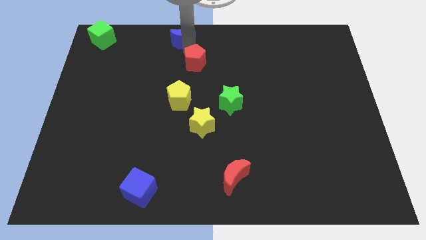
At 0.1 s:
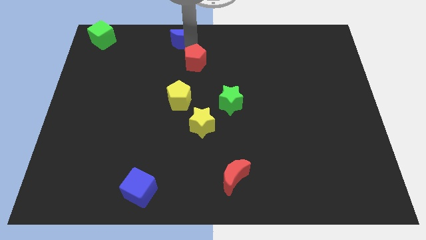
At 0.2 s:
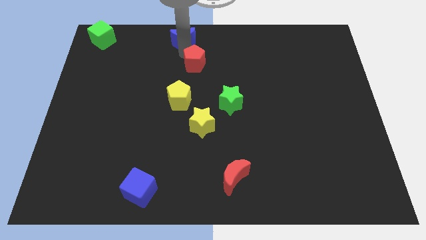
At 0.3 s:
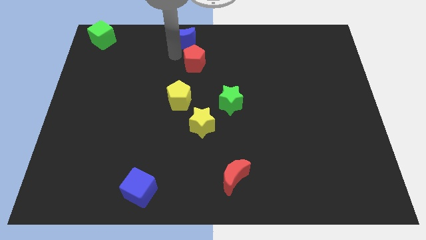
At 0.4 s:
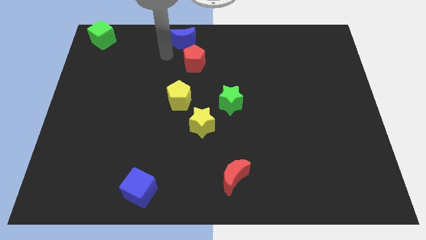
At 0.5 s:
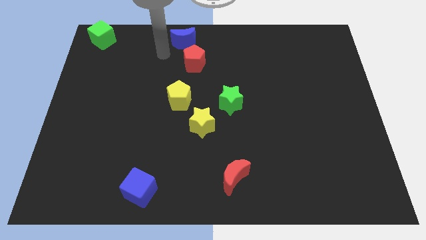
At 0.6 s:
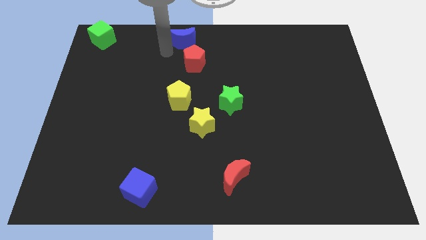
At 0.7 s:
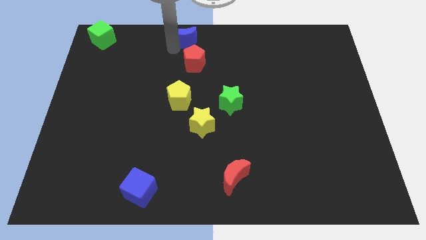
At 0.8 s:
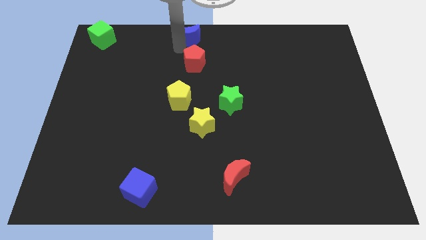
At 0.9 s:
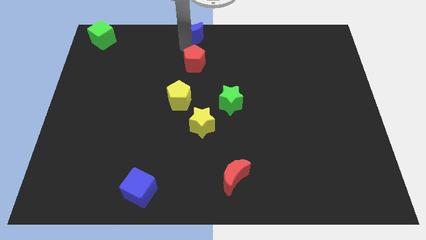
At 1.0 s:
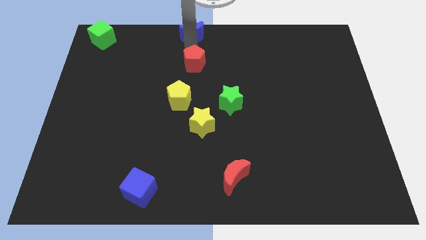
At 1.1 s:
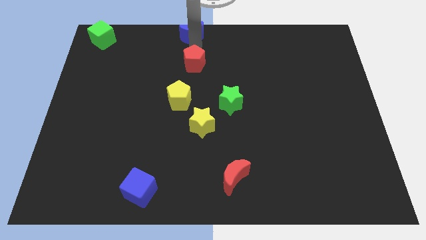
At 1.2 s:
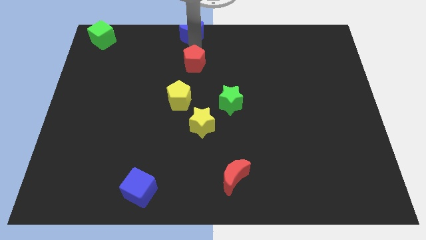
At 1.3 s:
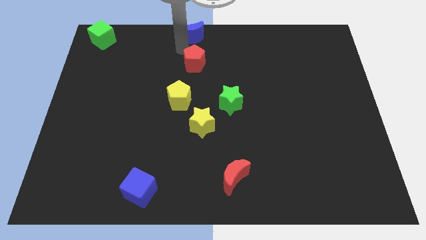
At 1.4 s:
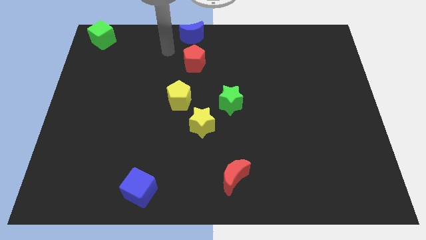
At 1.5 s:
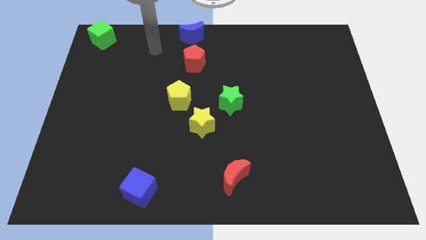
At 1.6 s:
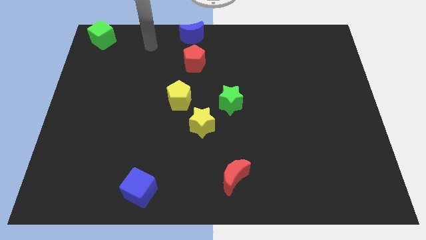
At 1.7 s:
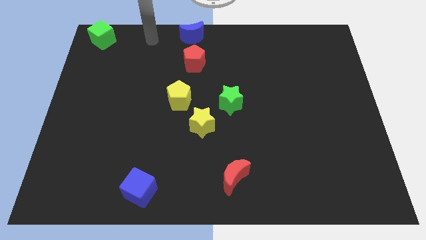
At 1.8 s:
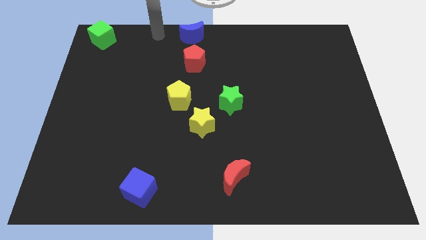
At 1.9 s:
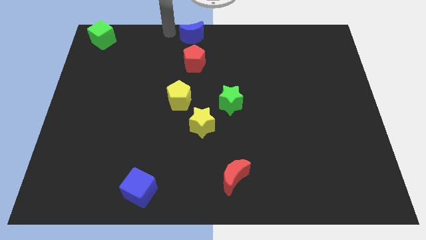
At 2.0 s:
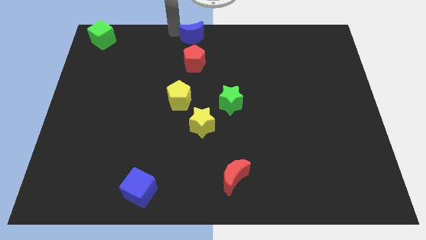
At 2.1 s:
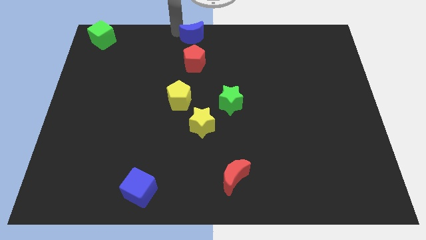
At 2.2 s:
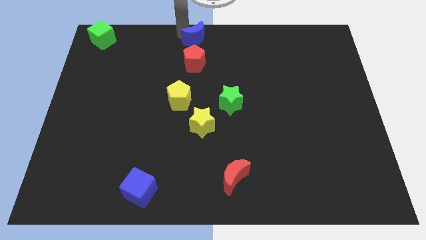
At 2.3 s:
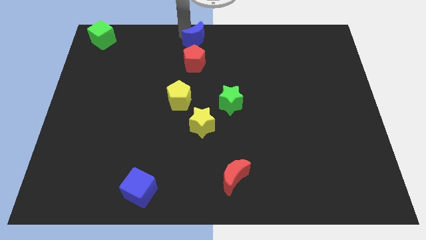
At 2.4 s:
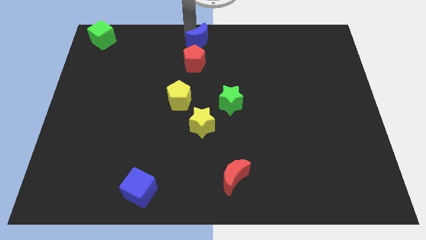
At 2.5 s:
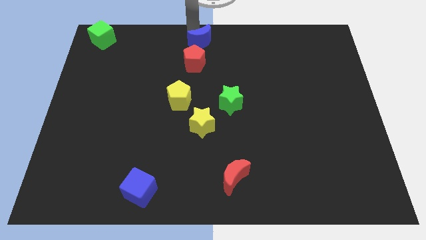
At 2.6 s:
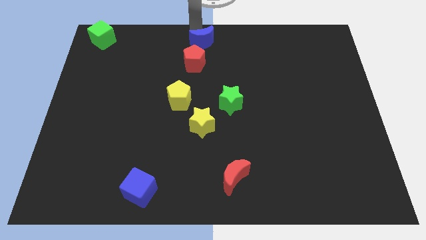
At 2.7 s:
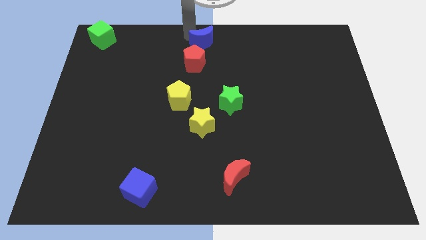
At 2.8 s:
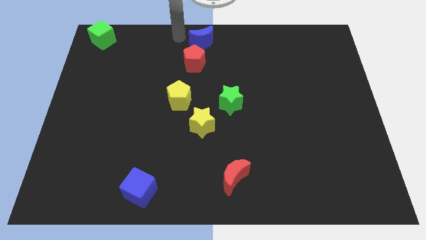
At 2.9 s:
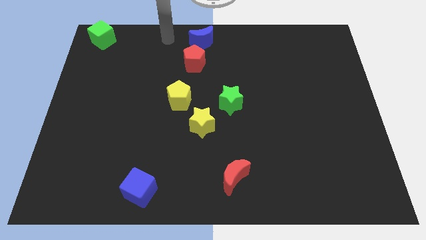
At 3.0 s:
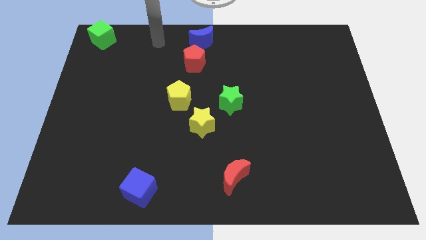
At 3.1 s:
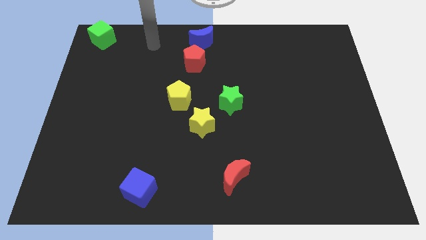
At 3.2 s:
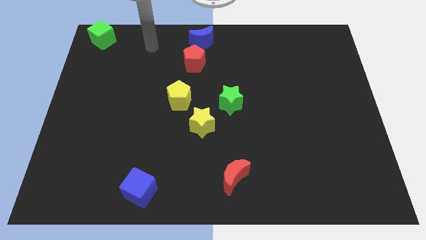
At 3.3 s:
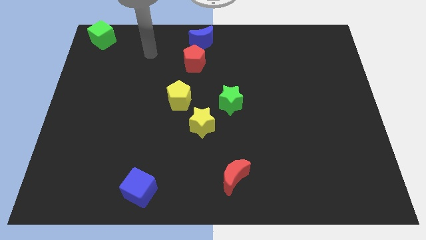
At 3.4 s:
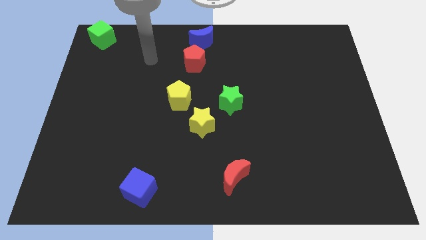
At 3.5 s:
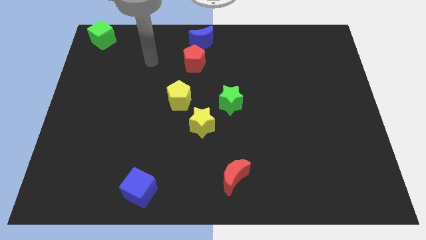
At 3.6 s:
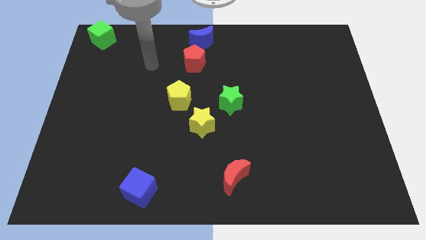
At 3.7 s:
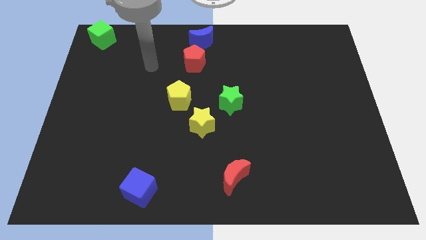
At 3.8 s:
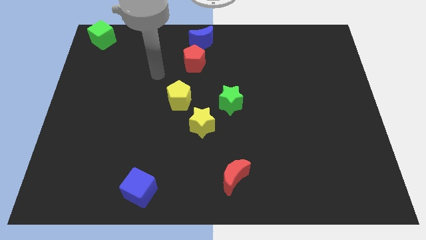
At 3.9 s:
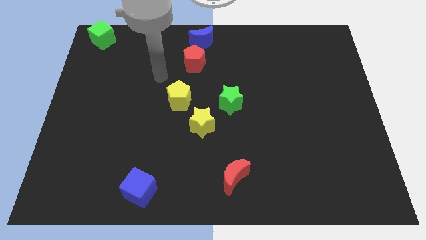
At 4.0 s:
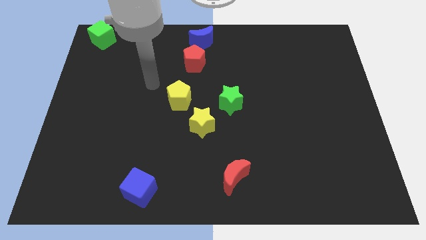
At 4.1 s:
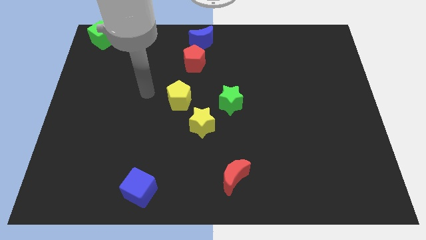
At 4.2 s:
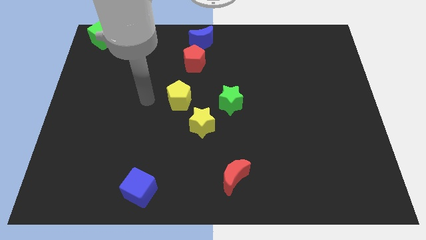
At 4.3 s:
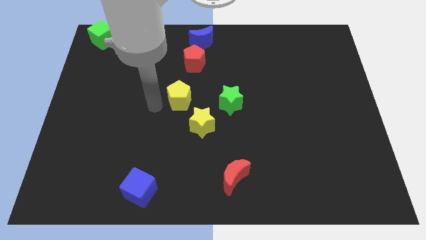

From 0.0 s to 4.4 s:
put the blue moon above the red pentagon

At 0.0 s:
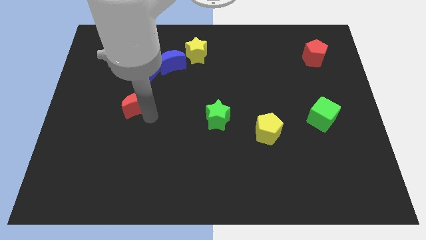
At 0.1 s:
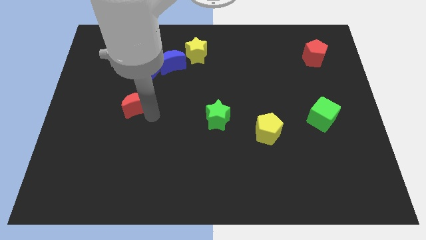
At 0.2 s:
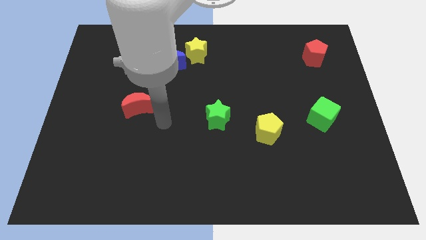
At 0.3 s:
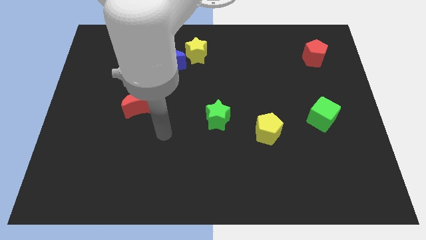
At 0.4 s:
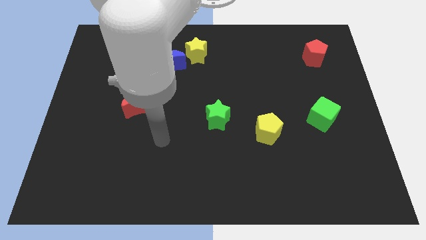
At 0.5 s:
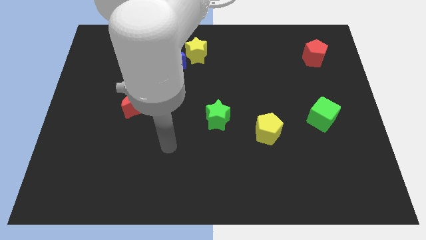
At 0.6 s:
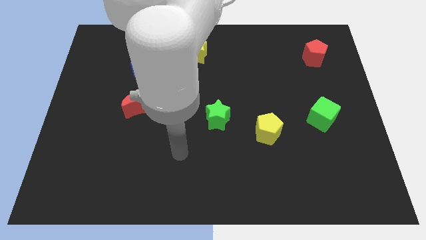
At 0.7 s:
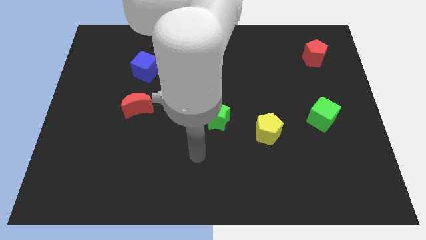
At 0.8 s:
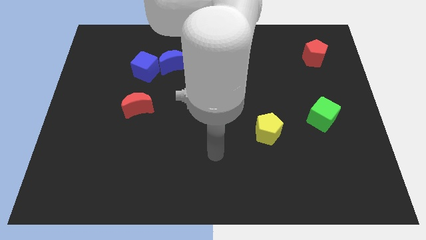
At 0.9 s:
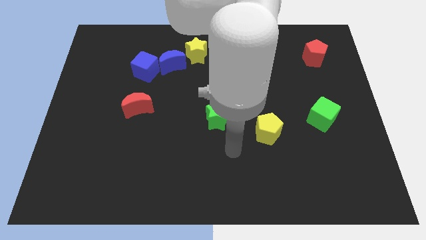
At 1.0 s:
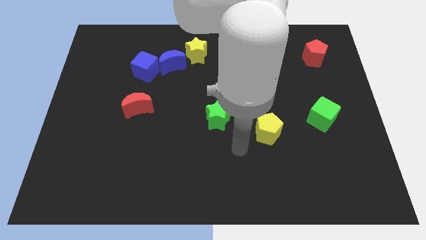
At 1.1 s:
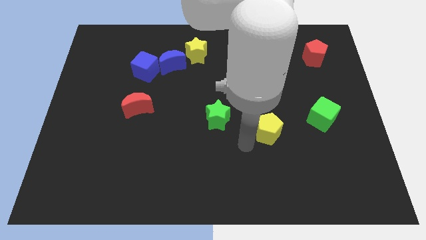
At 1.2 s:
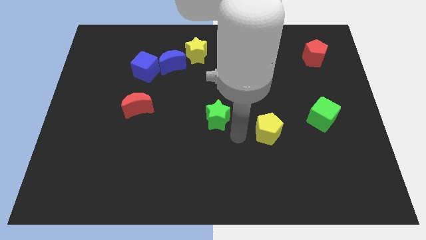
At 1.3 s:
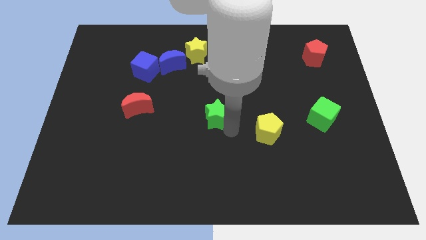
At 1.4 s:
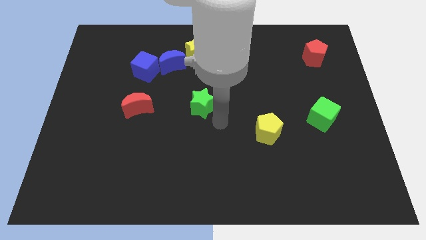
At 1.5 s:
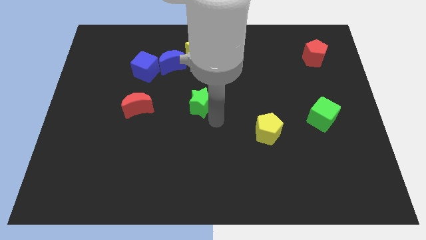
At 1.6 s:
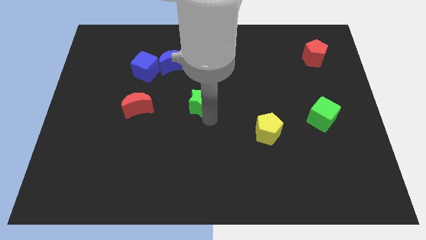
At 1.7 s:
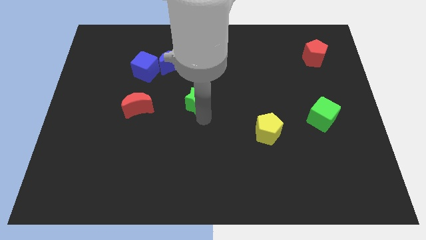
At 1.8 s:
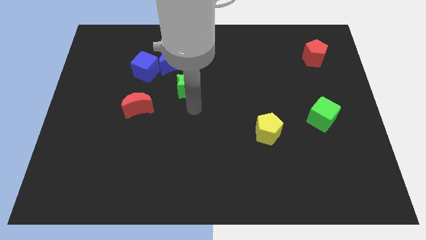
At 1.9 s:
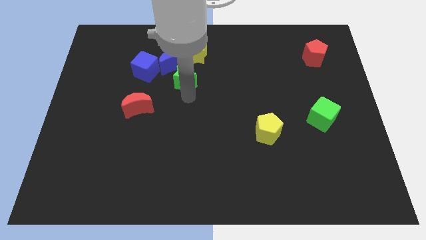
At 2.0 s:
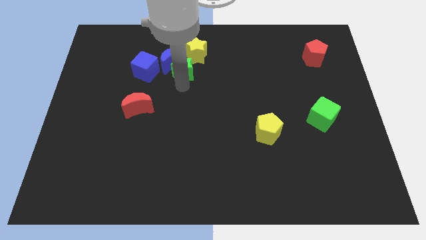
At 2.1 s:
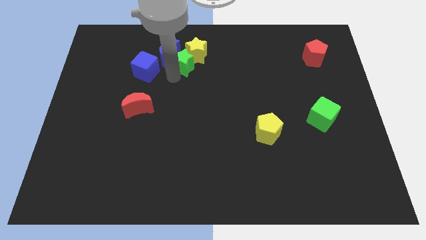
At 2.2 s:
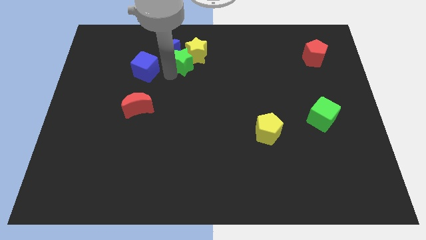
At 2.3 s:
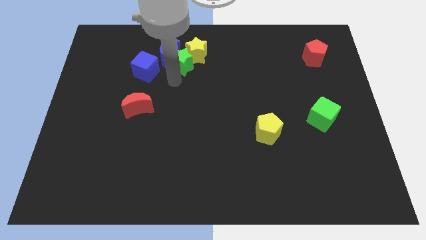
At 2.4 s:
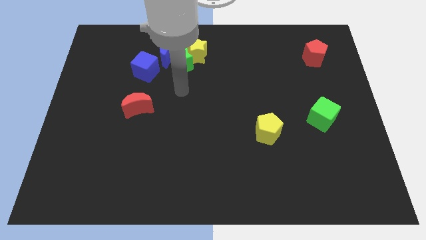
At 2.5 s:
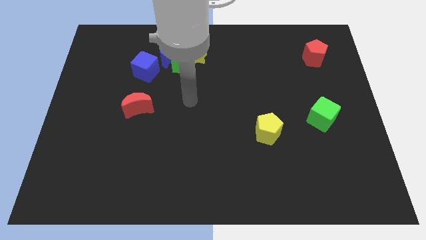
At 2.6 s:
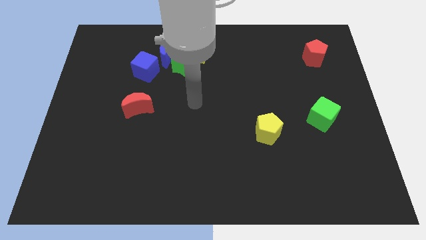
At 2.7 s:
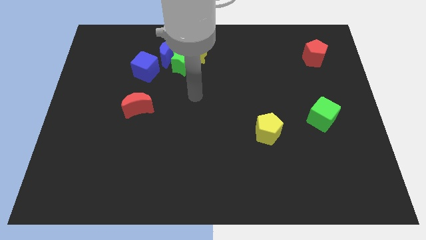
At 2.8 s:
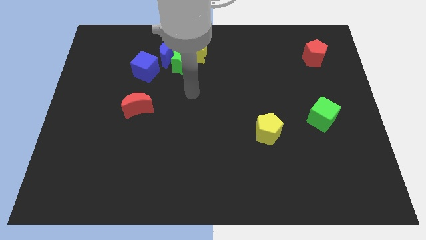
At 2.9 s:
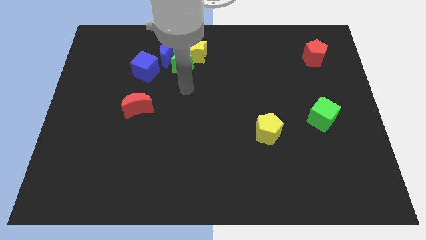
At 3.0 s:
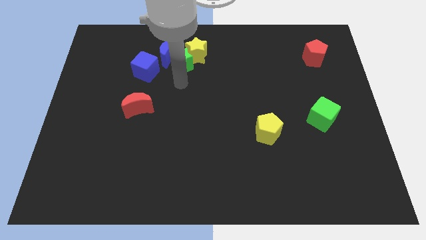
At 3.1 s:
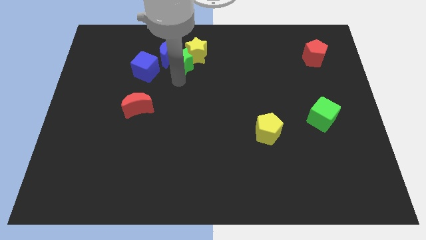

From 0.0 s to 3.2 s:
place green star to the left bottom of yellow star

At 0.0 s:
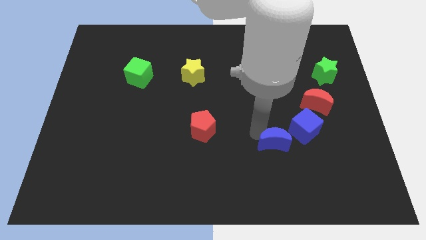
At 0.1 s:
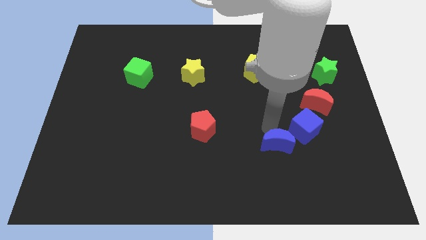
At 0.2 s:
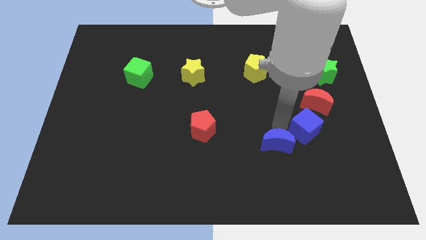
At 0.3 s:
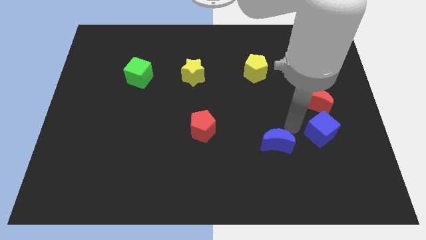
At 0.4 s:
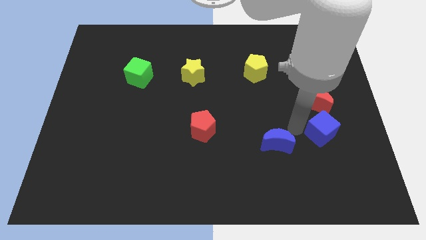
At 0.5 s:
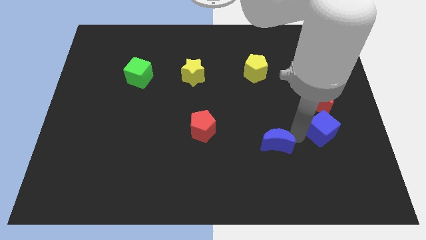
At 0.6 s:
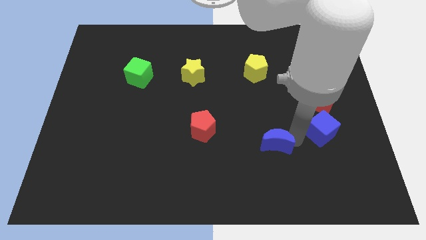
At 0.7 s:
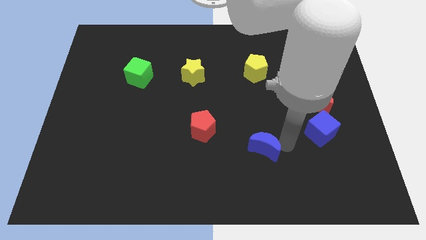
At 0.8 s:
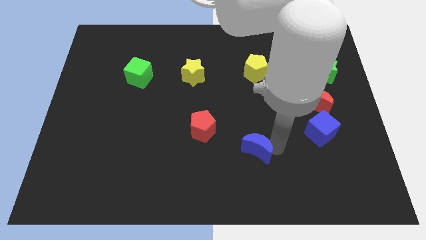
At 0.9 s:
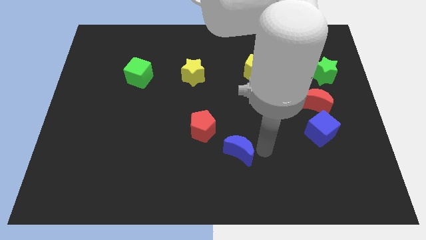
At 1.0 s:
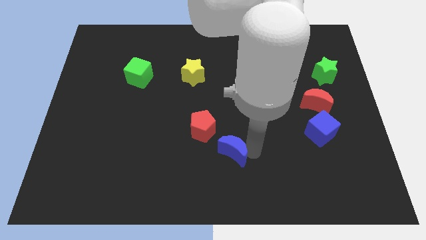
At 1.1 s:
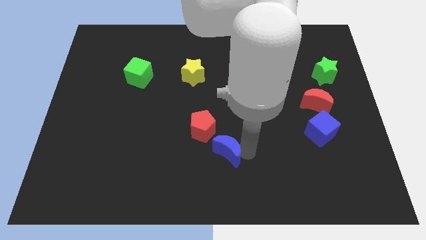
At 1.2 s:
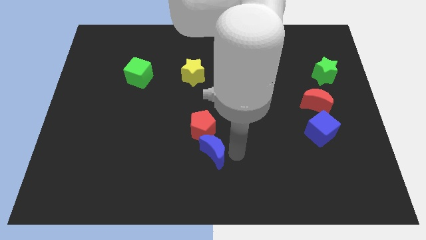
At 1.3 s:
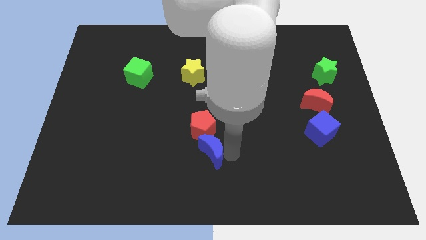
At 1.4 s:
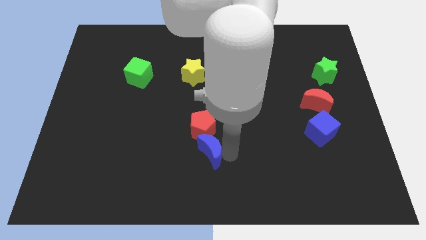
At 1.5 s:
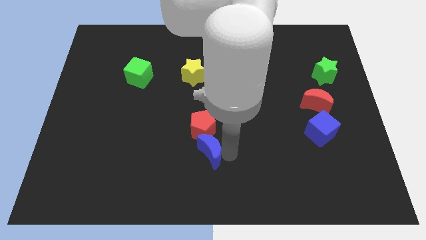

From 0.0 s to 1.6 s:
move the blue moon below the red pentagon
